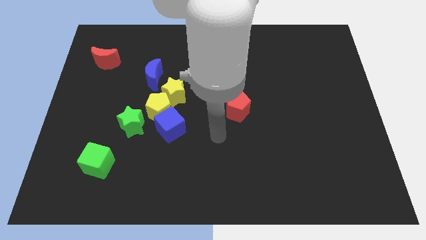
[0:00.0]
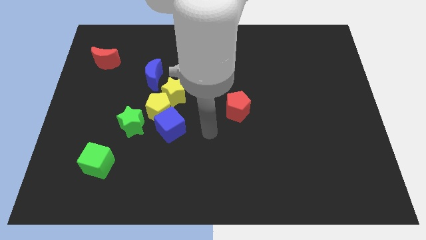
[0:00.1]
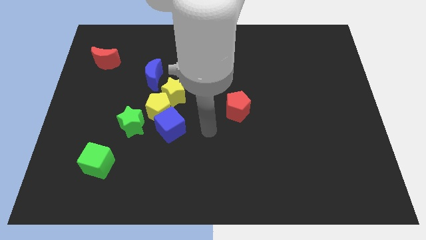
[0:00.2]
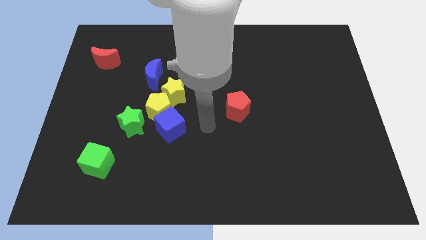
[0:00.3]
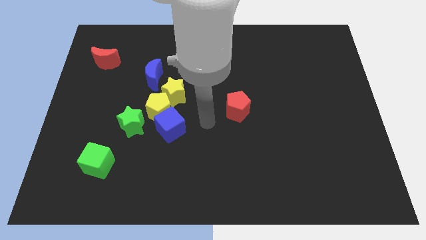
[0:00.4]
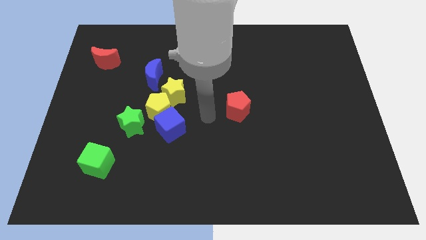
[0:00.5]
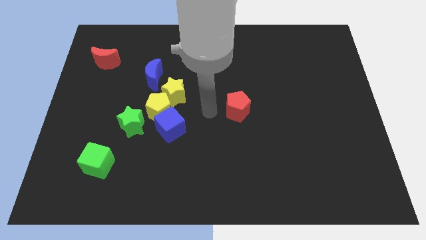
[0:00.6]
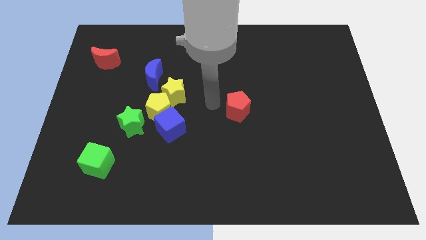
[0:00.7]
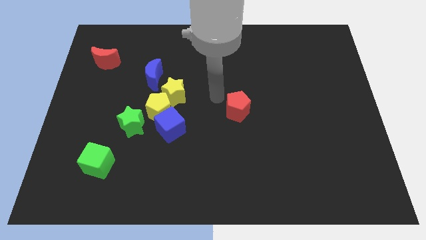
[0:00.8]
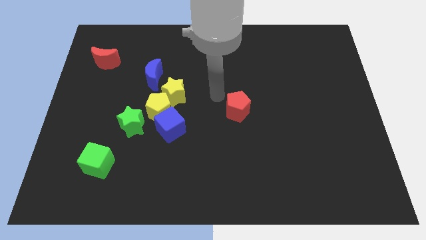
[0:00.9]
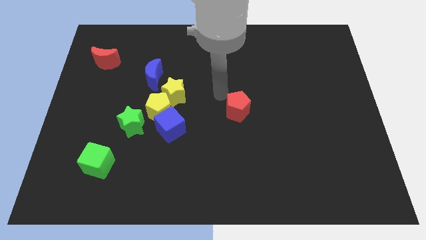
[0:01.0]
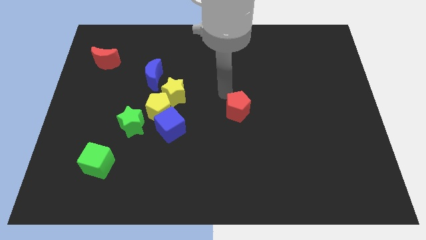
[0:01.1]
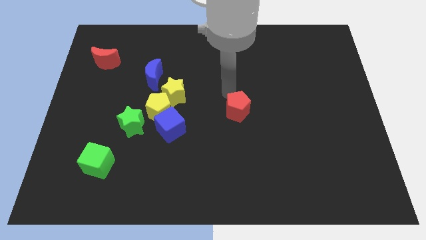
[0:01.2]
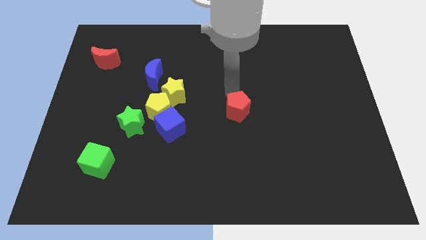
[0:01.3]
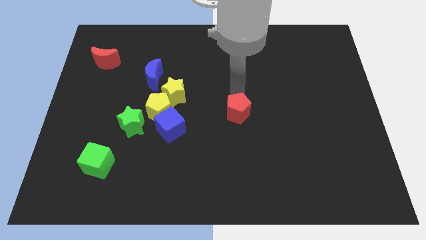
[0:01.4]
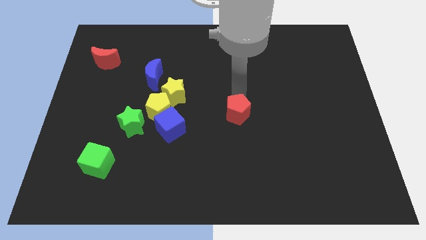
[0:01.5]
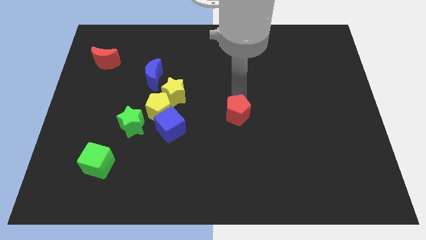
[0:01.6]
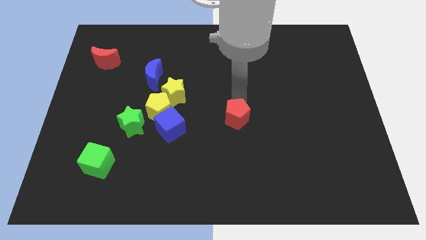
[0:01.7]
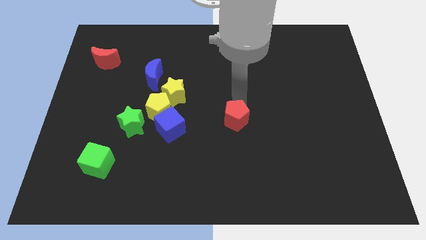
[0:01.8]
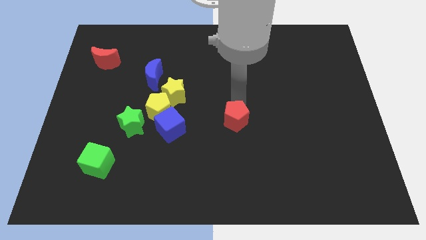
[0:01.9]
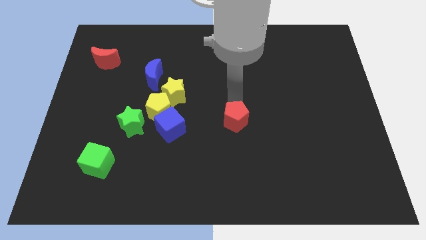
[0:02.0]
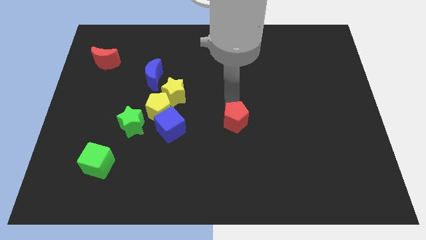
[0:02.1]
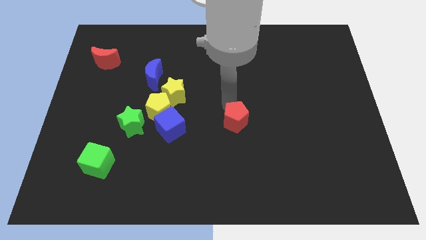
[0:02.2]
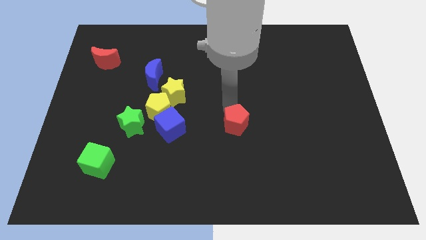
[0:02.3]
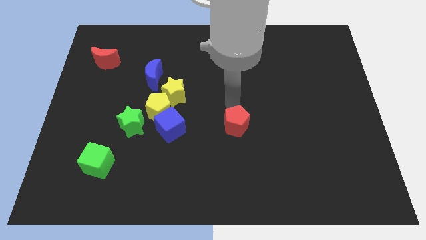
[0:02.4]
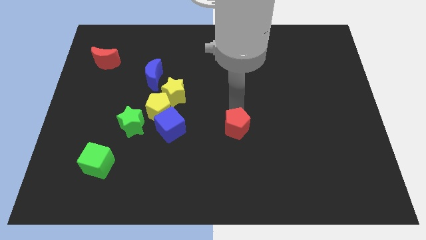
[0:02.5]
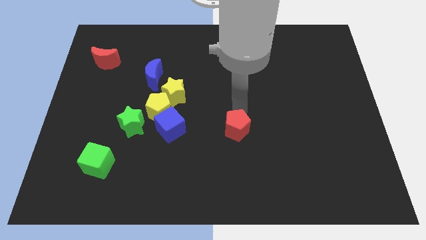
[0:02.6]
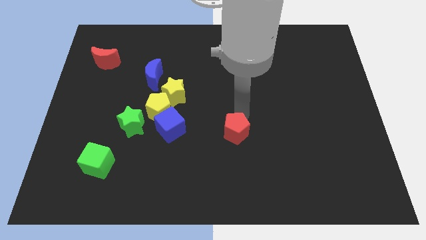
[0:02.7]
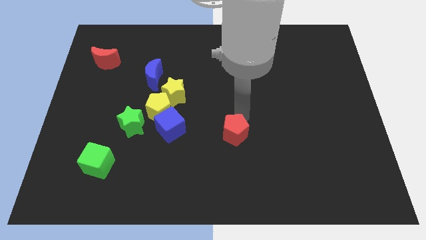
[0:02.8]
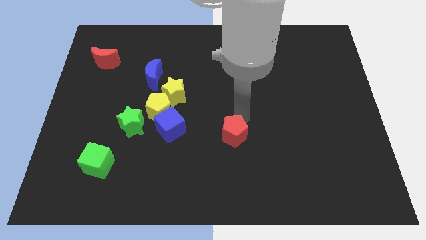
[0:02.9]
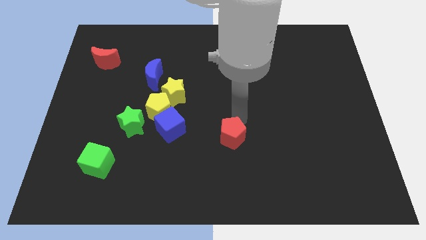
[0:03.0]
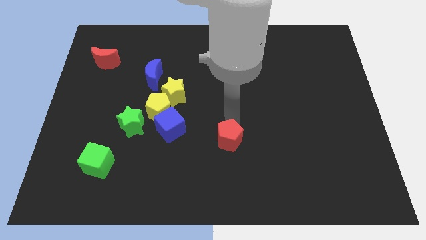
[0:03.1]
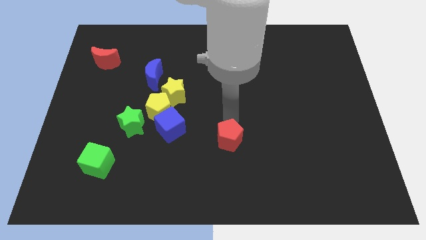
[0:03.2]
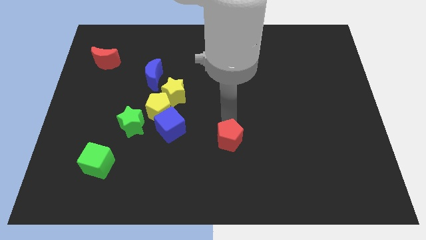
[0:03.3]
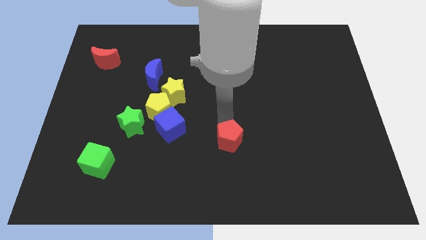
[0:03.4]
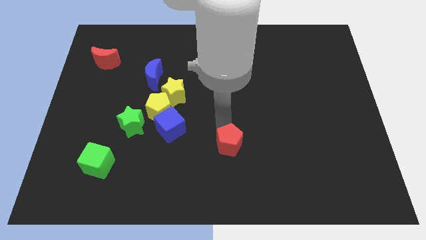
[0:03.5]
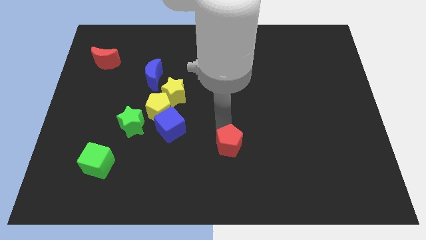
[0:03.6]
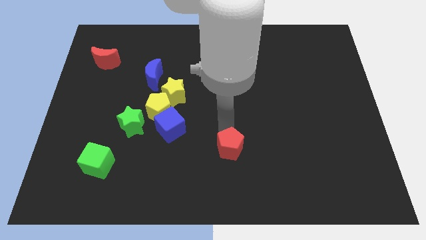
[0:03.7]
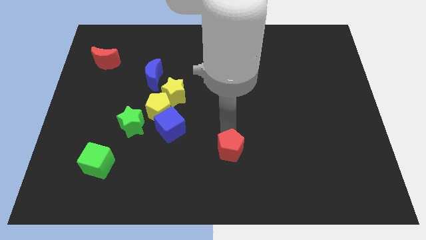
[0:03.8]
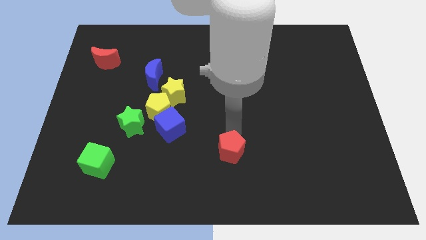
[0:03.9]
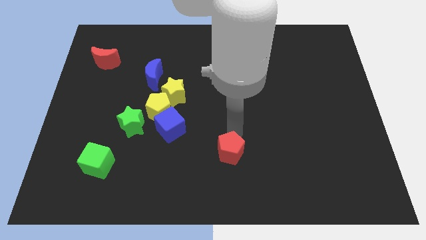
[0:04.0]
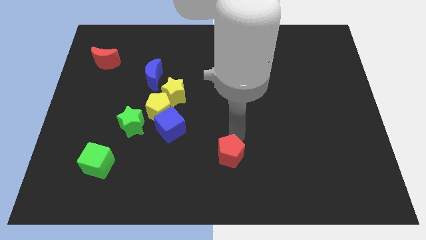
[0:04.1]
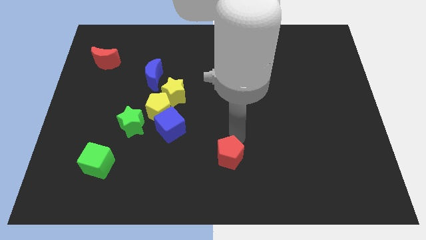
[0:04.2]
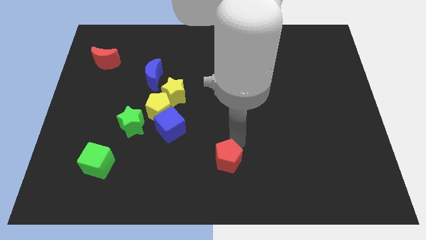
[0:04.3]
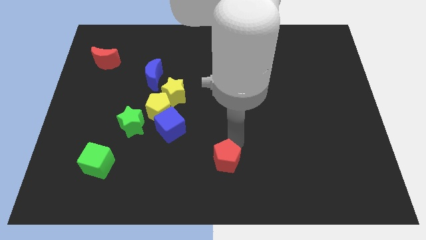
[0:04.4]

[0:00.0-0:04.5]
move red pentagon towards the bottom side of the board

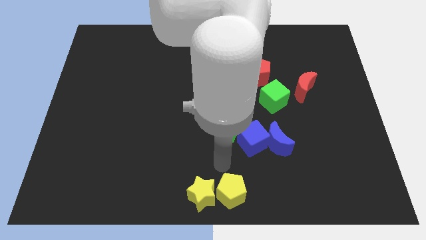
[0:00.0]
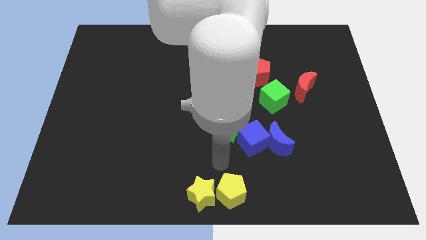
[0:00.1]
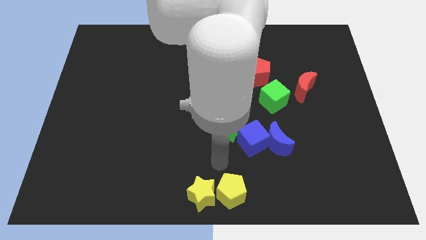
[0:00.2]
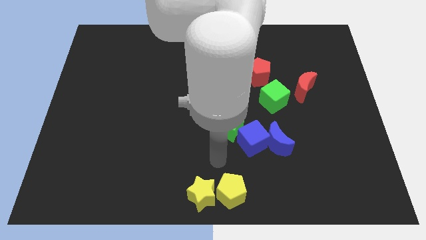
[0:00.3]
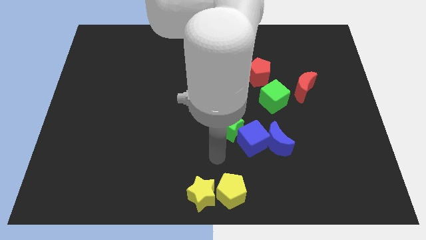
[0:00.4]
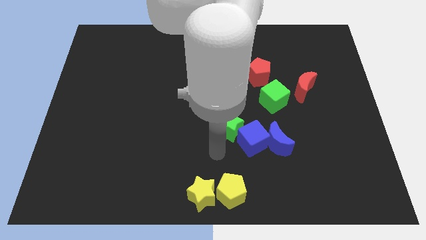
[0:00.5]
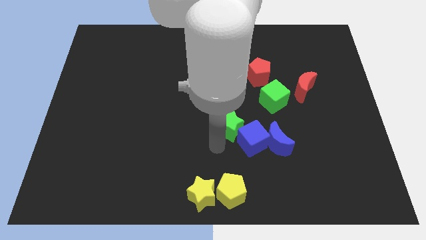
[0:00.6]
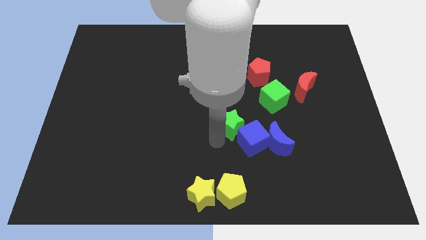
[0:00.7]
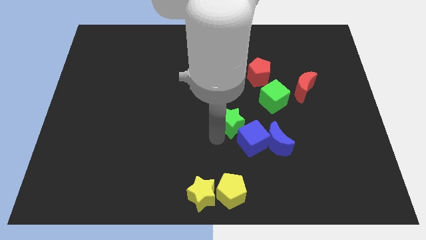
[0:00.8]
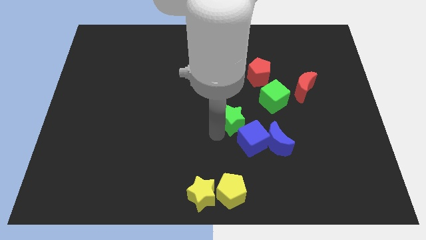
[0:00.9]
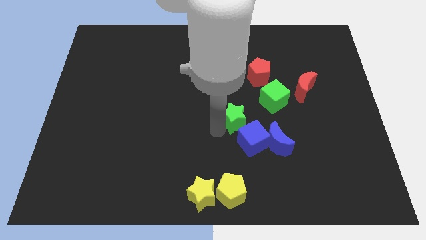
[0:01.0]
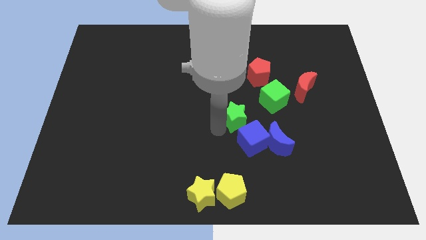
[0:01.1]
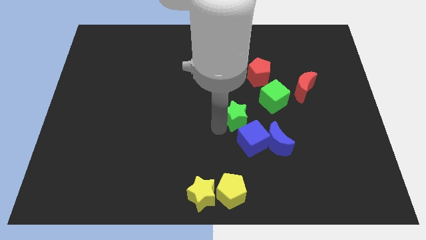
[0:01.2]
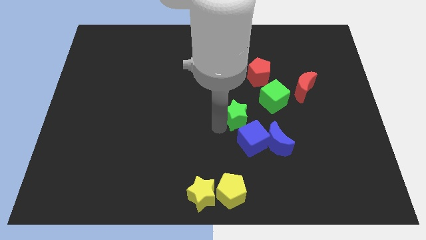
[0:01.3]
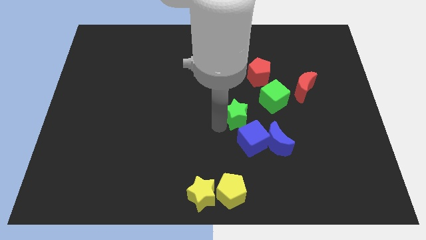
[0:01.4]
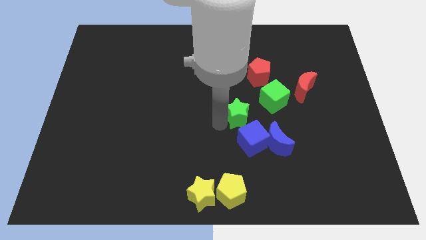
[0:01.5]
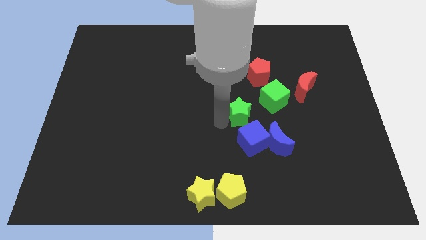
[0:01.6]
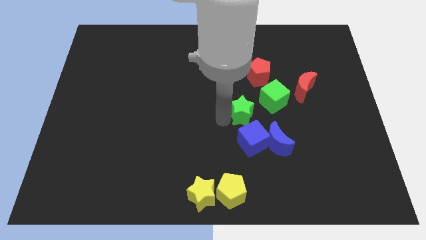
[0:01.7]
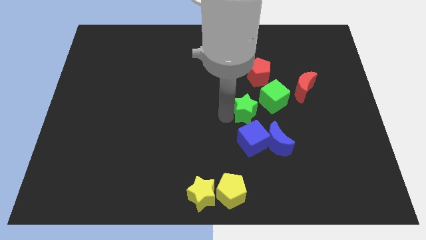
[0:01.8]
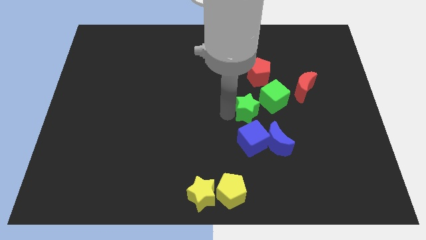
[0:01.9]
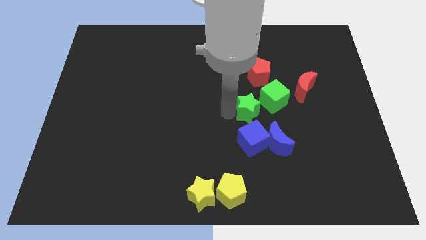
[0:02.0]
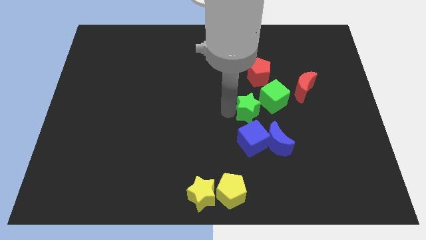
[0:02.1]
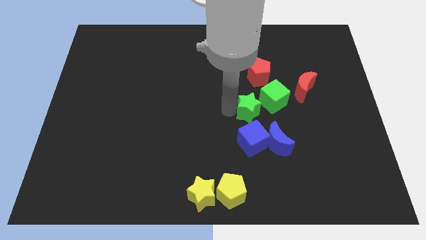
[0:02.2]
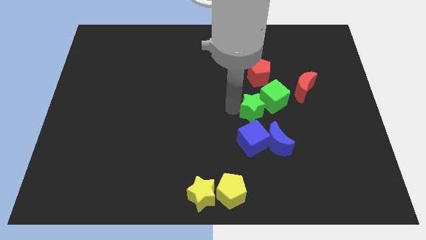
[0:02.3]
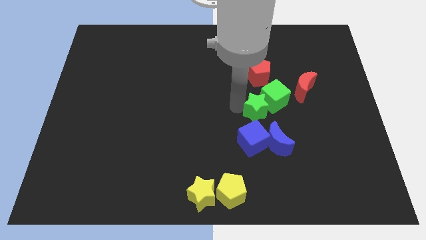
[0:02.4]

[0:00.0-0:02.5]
place the green star above the blue cube

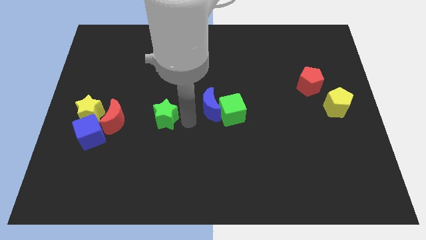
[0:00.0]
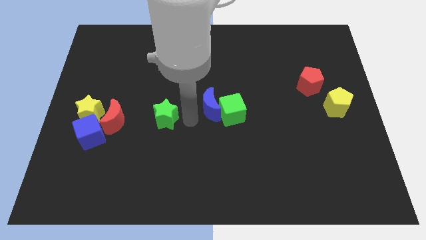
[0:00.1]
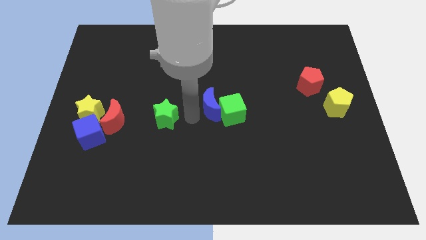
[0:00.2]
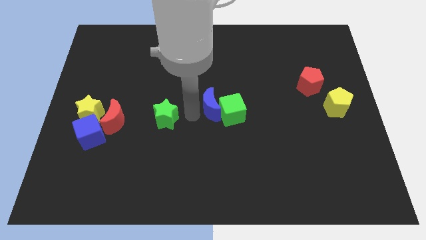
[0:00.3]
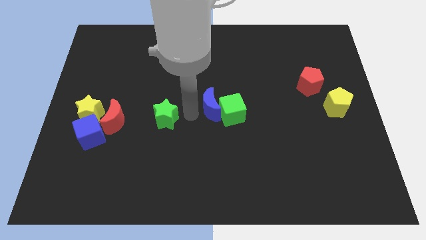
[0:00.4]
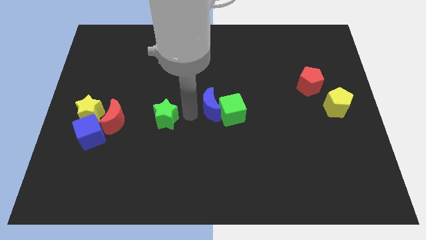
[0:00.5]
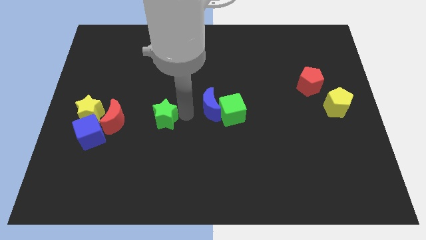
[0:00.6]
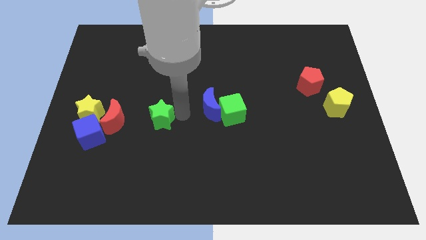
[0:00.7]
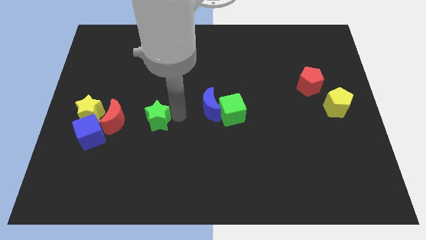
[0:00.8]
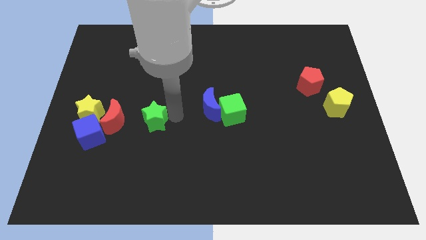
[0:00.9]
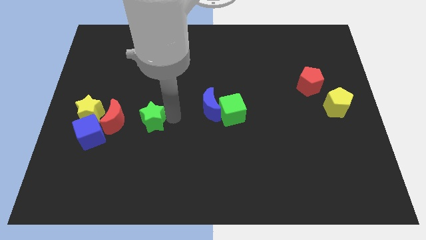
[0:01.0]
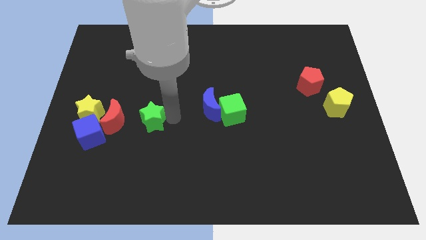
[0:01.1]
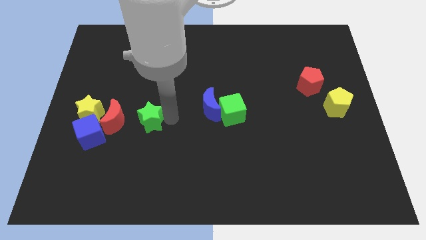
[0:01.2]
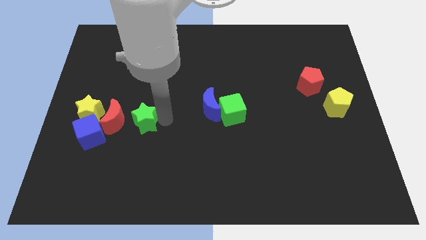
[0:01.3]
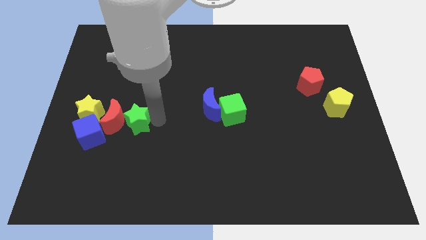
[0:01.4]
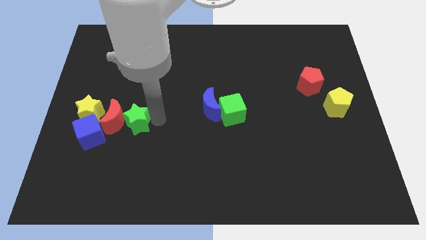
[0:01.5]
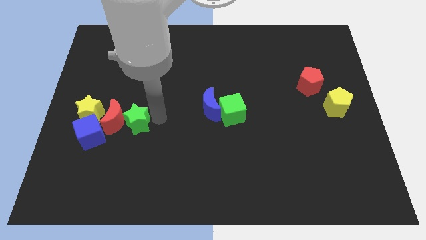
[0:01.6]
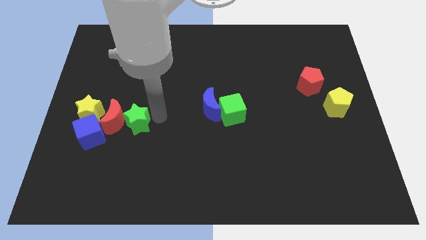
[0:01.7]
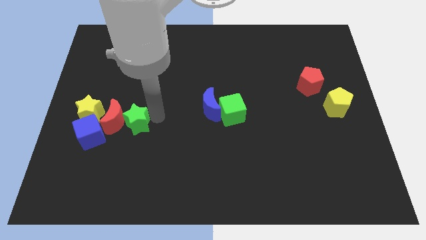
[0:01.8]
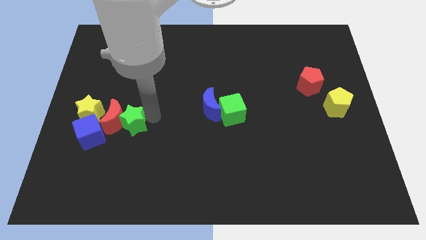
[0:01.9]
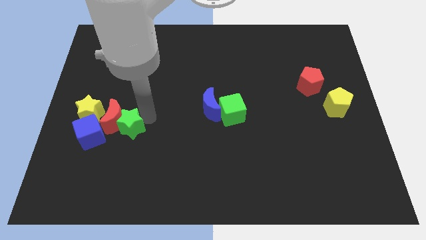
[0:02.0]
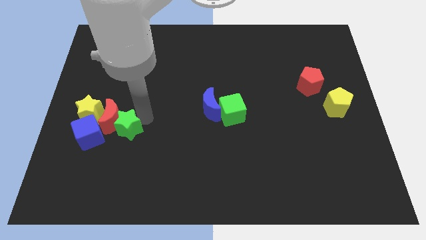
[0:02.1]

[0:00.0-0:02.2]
push green star into red moon
